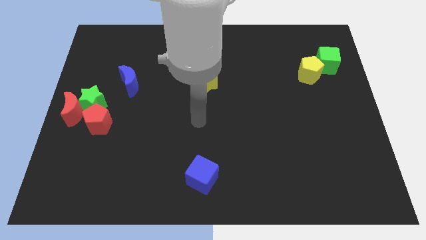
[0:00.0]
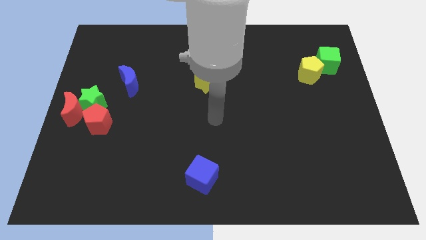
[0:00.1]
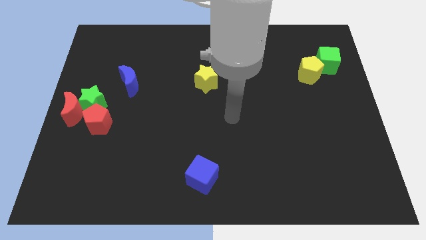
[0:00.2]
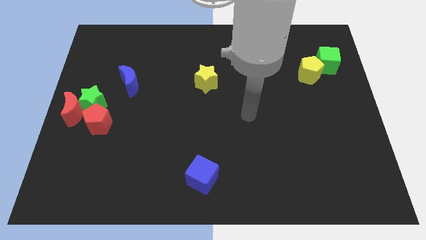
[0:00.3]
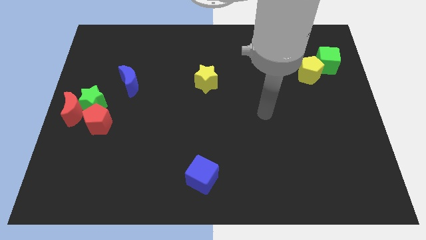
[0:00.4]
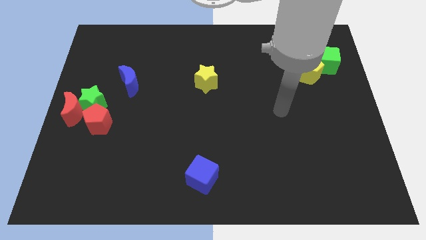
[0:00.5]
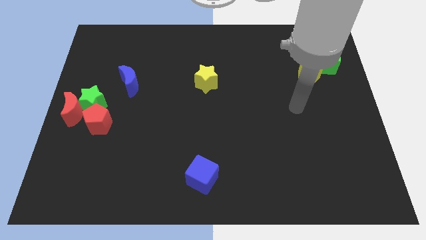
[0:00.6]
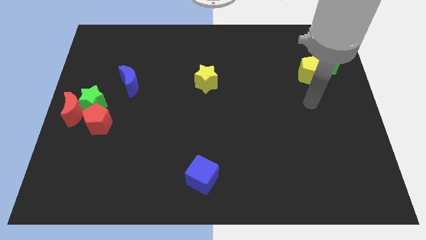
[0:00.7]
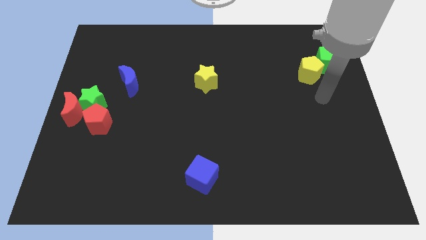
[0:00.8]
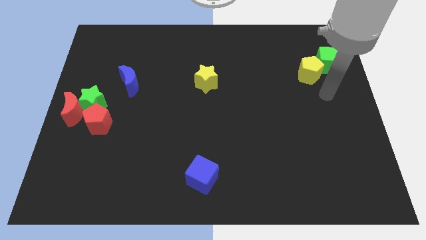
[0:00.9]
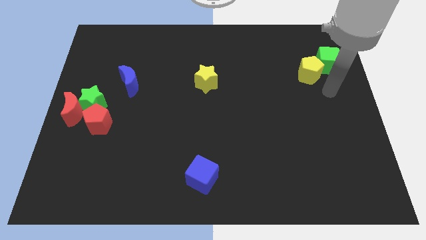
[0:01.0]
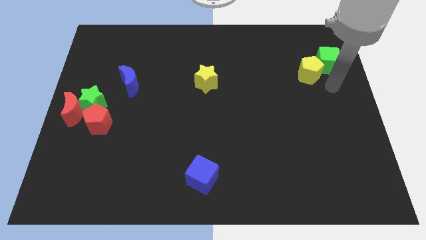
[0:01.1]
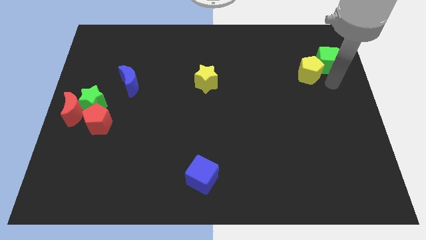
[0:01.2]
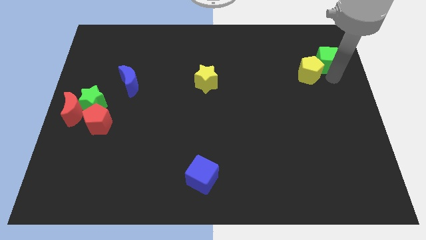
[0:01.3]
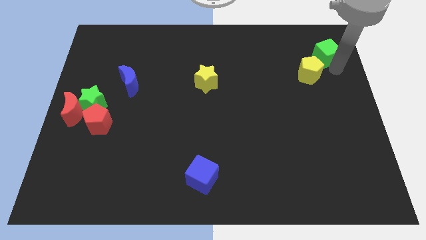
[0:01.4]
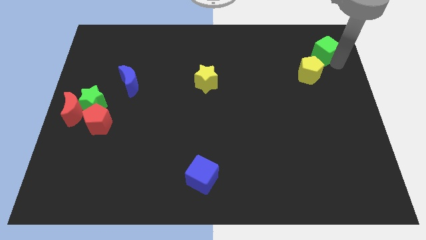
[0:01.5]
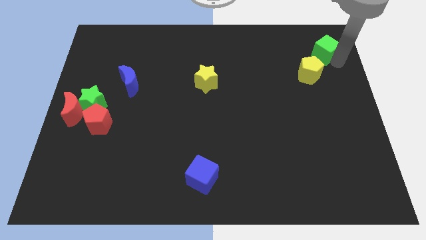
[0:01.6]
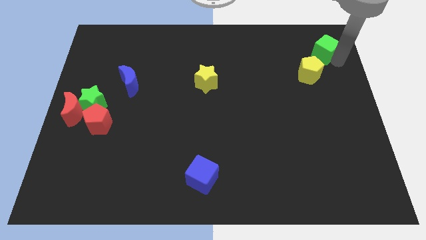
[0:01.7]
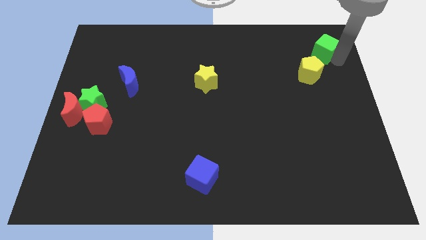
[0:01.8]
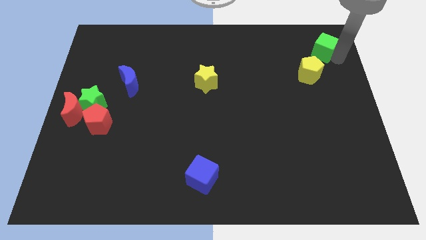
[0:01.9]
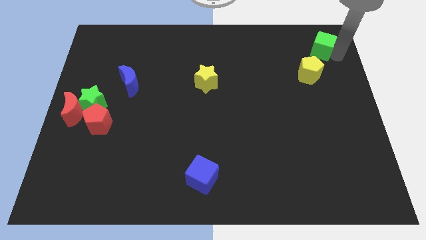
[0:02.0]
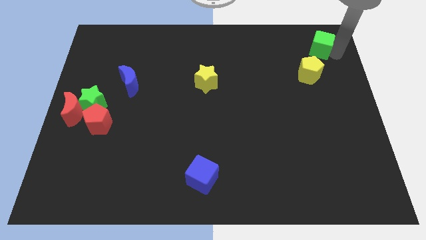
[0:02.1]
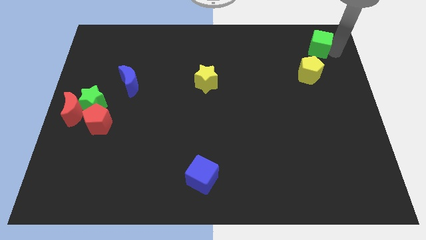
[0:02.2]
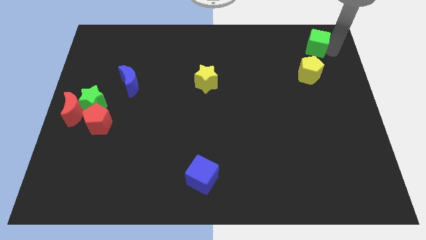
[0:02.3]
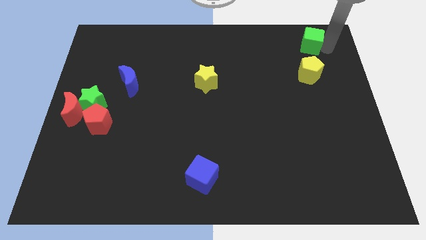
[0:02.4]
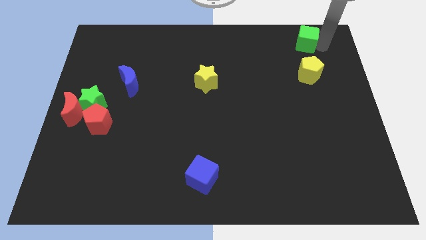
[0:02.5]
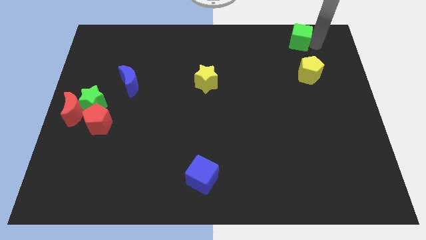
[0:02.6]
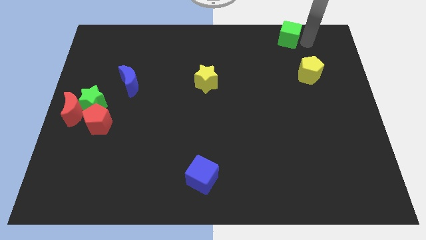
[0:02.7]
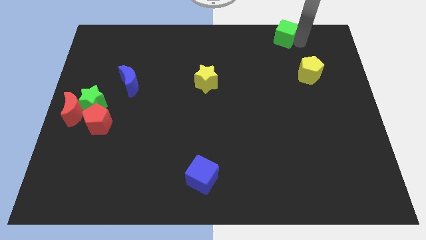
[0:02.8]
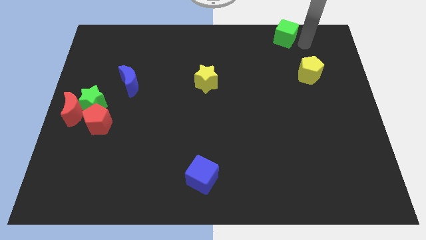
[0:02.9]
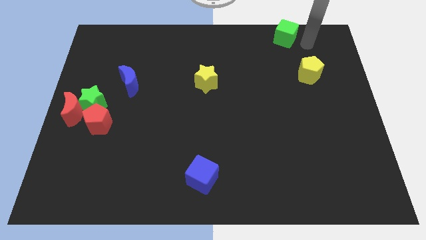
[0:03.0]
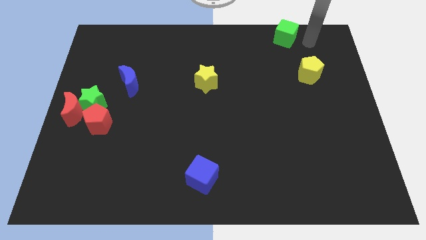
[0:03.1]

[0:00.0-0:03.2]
move the green cube away from the yellow pentagon

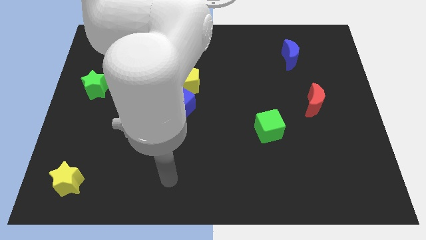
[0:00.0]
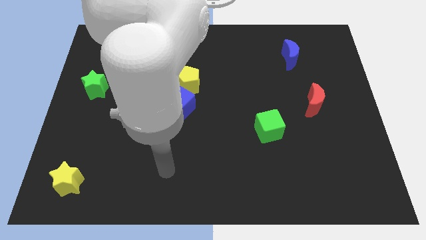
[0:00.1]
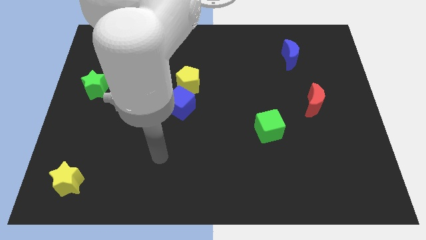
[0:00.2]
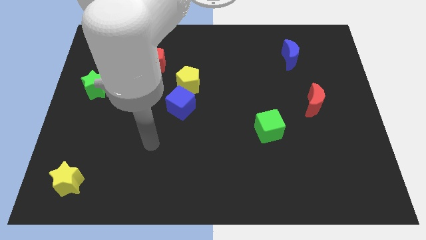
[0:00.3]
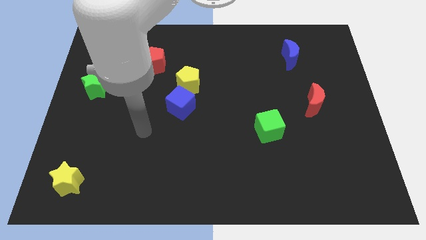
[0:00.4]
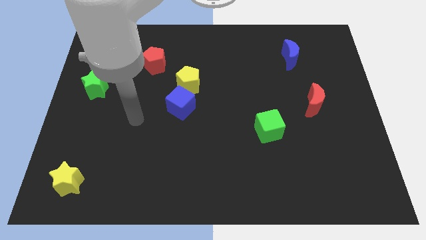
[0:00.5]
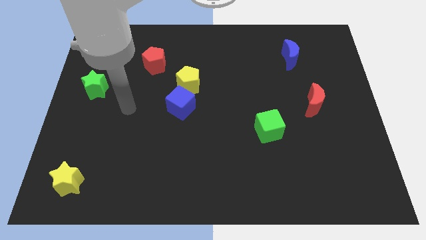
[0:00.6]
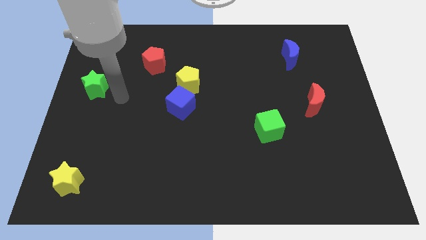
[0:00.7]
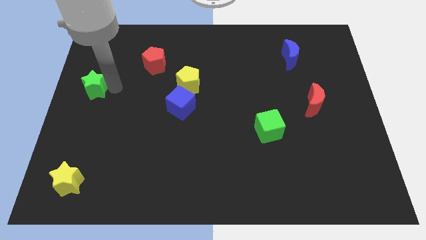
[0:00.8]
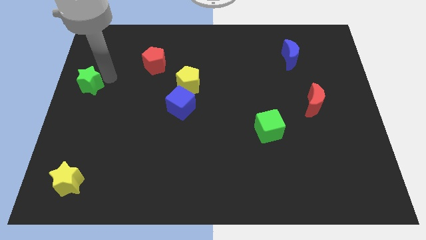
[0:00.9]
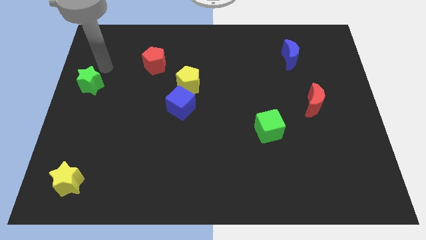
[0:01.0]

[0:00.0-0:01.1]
tap green star to the left slightly

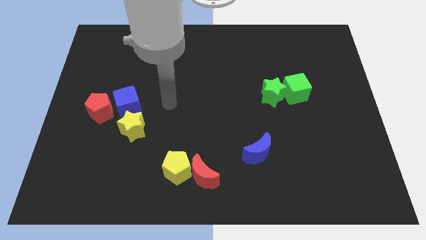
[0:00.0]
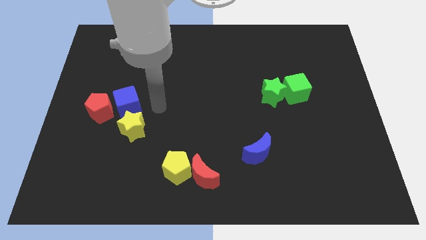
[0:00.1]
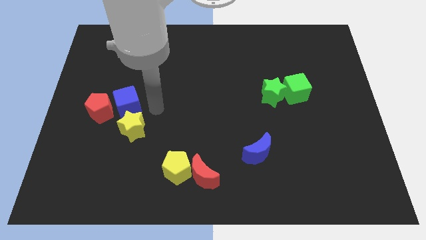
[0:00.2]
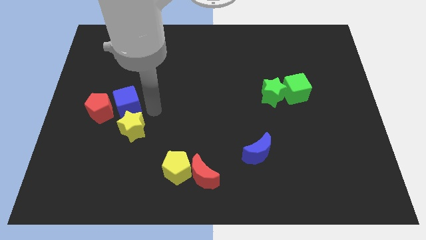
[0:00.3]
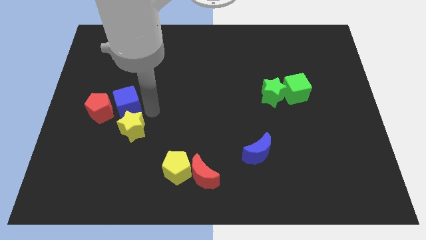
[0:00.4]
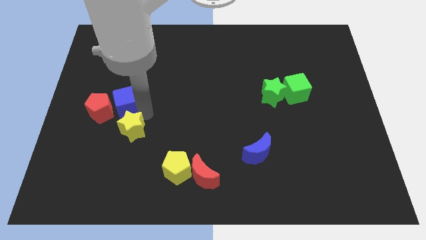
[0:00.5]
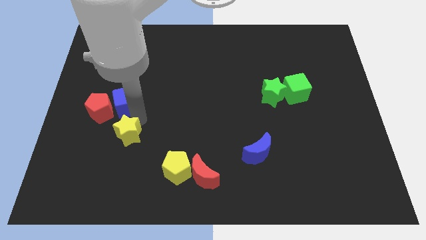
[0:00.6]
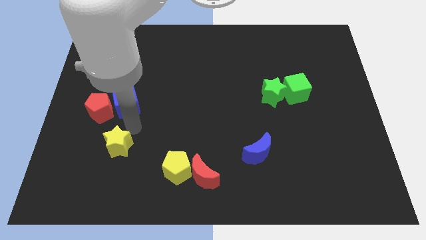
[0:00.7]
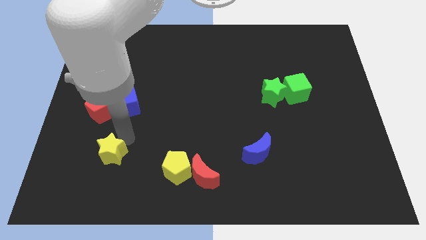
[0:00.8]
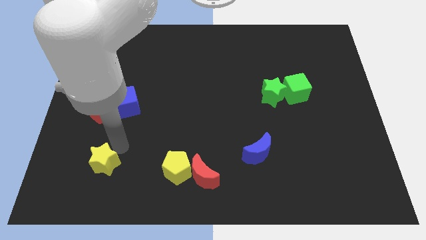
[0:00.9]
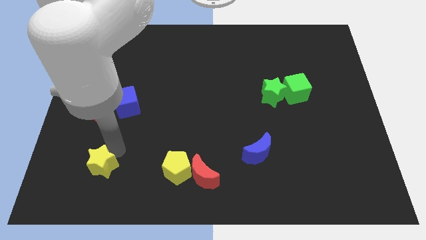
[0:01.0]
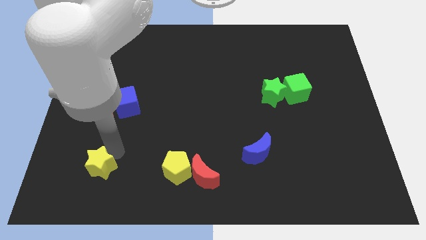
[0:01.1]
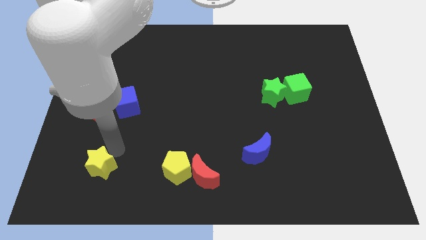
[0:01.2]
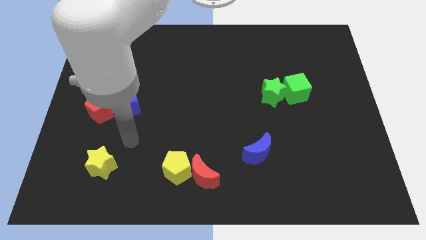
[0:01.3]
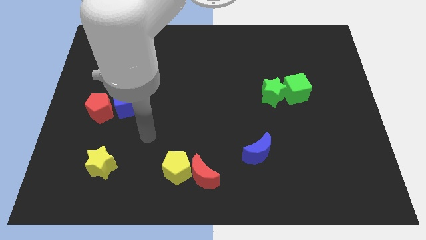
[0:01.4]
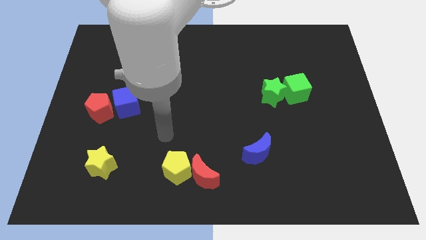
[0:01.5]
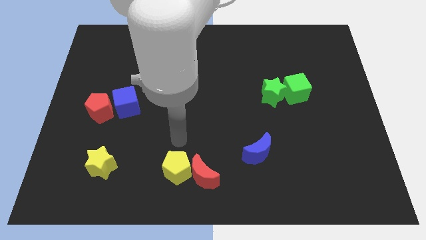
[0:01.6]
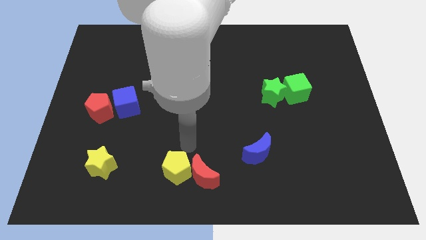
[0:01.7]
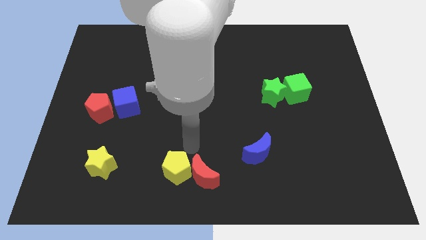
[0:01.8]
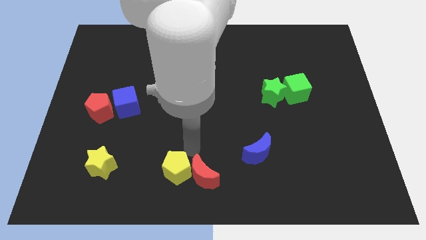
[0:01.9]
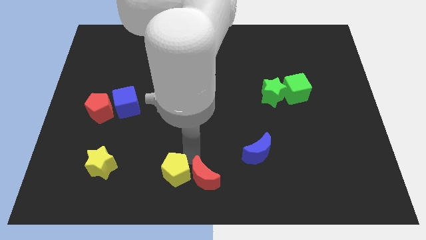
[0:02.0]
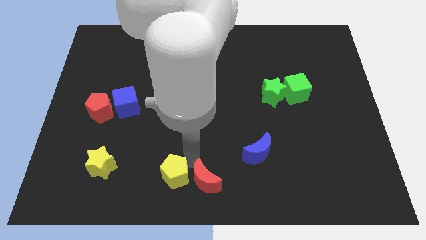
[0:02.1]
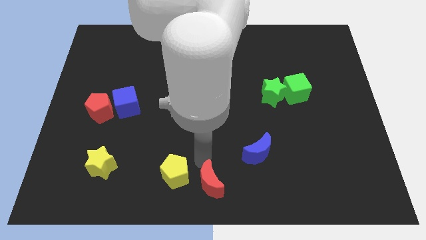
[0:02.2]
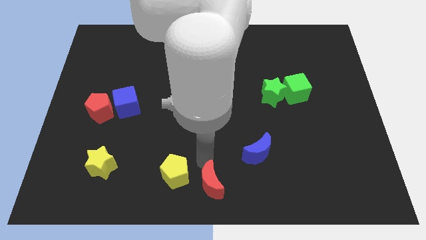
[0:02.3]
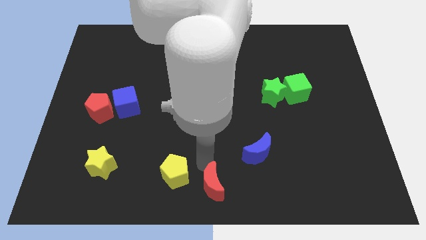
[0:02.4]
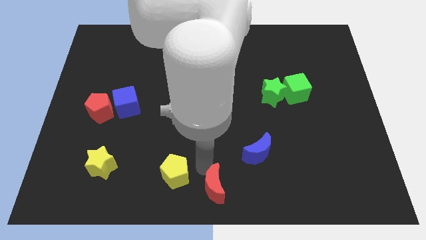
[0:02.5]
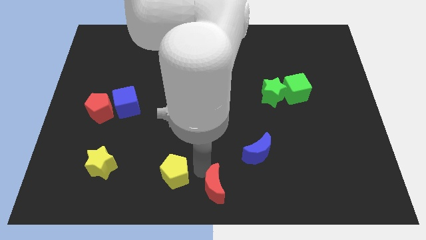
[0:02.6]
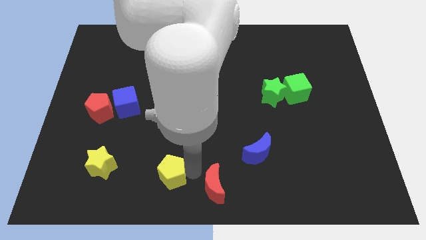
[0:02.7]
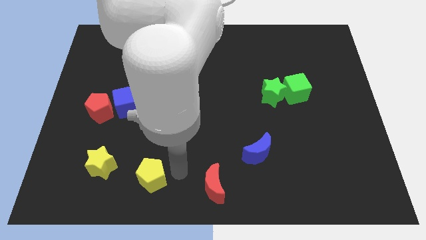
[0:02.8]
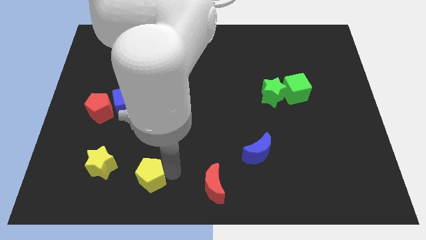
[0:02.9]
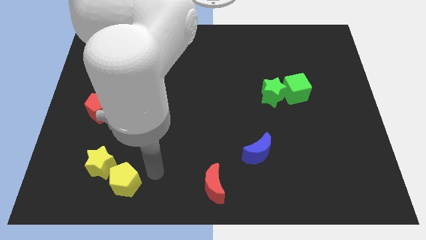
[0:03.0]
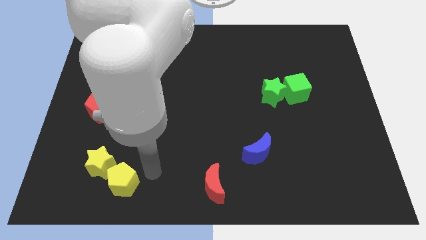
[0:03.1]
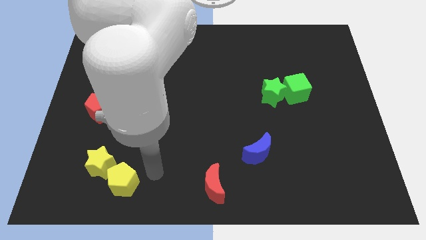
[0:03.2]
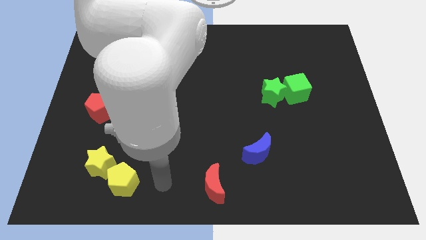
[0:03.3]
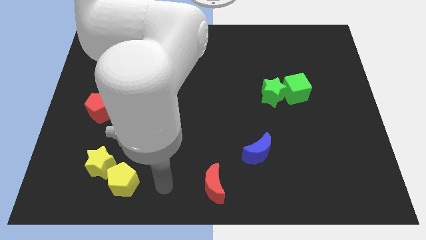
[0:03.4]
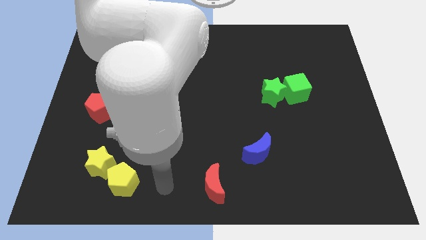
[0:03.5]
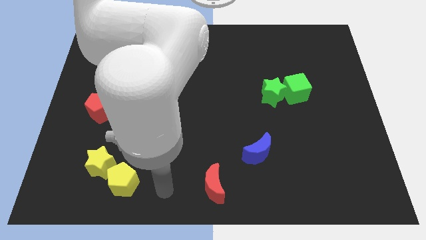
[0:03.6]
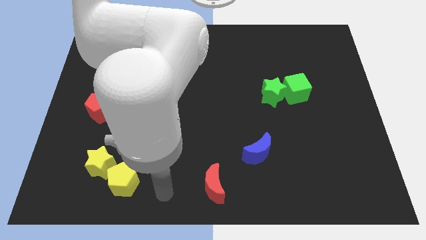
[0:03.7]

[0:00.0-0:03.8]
move the yellow blocks together at the left side of the red crescent

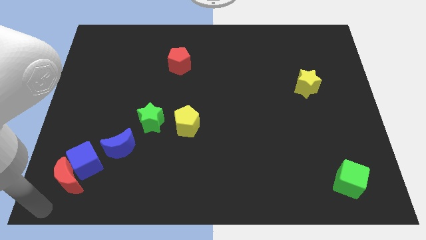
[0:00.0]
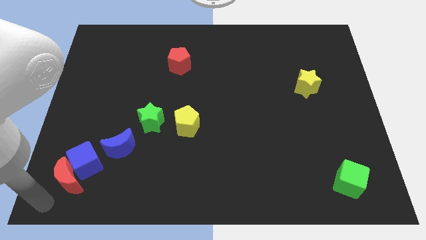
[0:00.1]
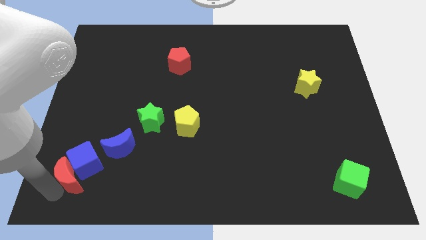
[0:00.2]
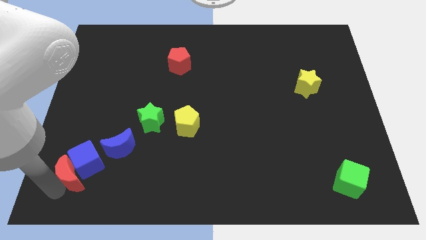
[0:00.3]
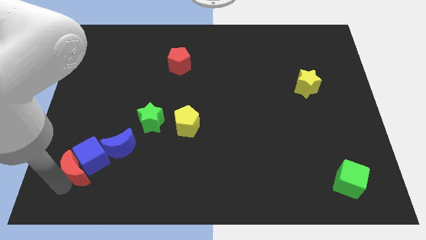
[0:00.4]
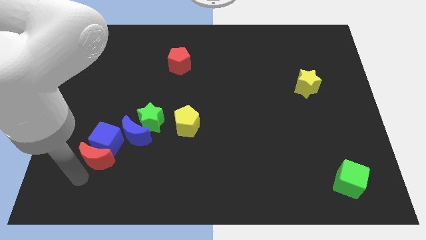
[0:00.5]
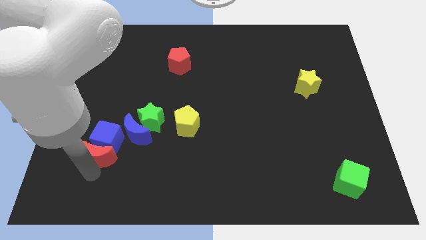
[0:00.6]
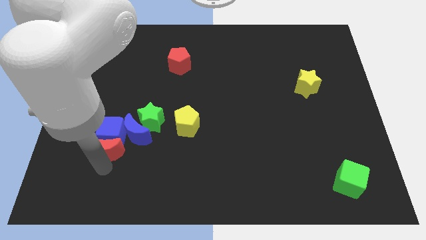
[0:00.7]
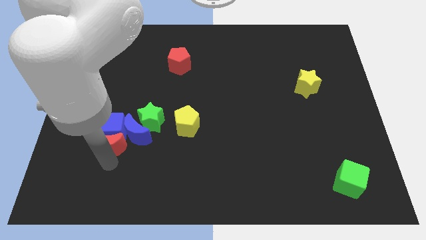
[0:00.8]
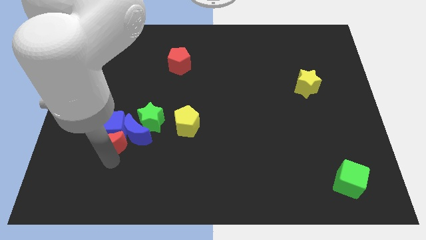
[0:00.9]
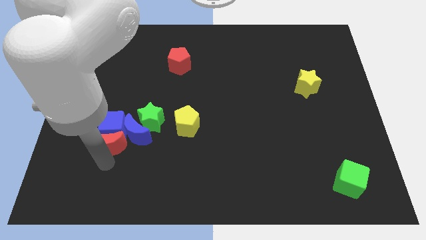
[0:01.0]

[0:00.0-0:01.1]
push the red moon and blue cube to the group of object
